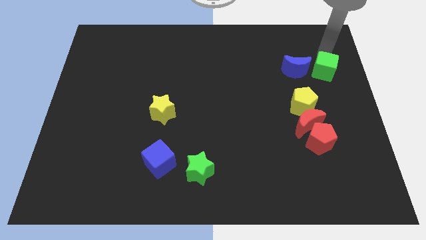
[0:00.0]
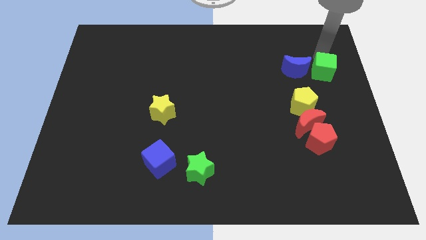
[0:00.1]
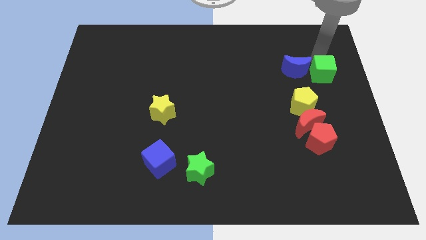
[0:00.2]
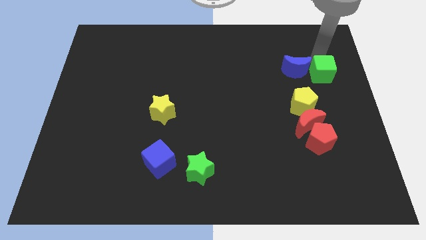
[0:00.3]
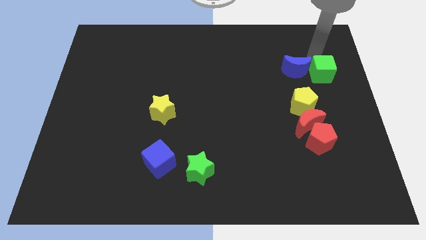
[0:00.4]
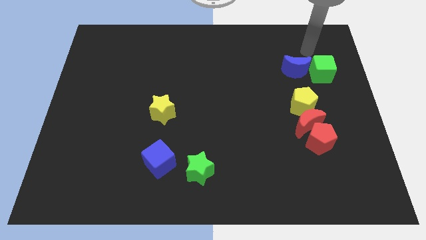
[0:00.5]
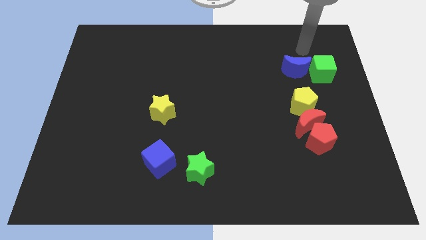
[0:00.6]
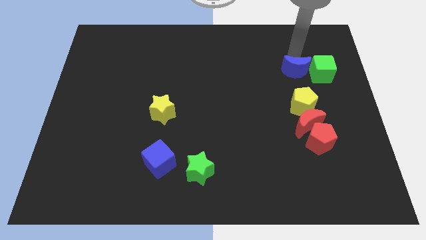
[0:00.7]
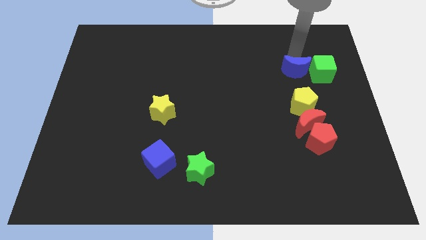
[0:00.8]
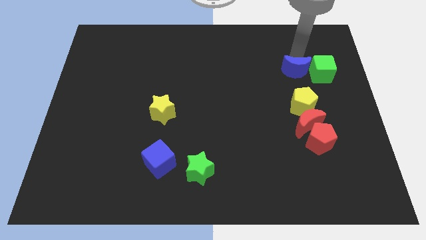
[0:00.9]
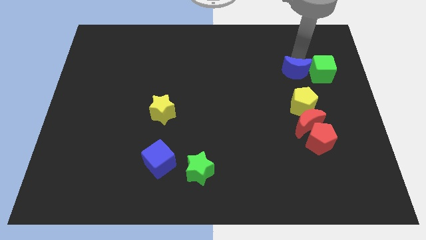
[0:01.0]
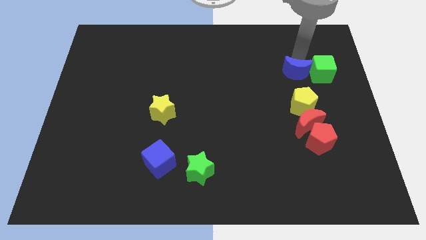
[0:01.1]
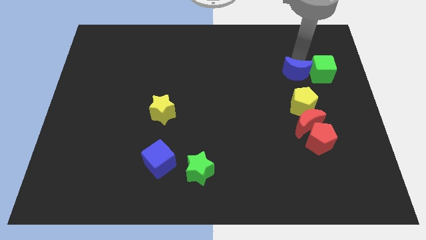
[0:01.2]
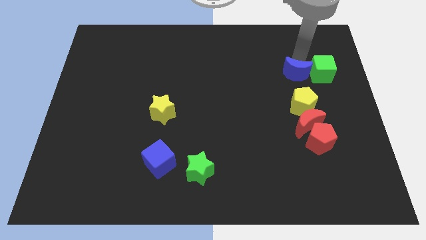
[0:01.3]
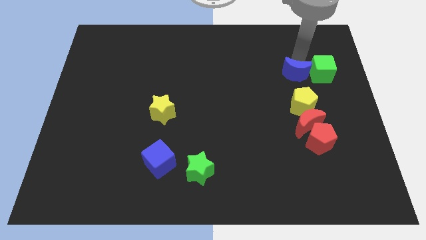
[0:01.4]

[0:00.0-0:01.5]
push the green cube close to blue crescent

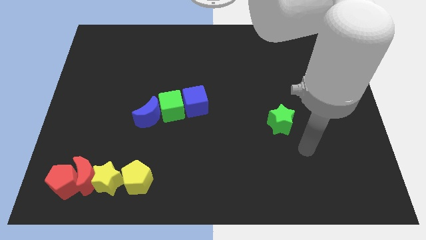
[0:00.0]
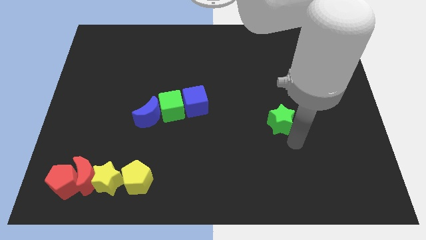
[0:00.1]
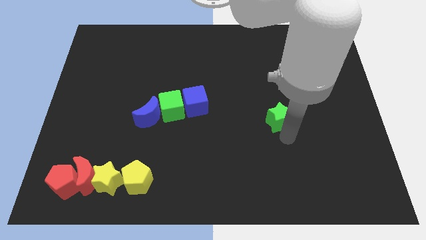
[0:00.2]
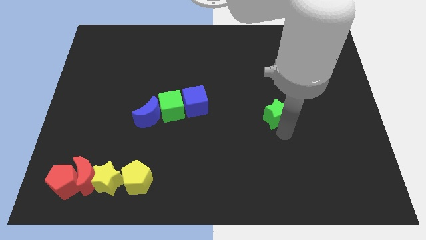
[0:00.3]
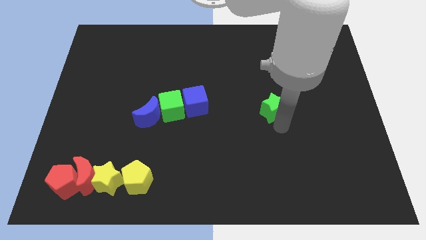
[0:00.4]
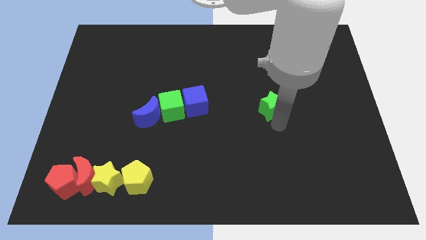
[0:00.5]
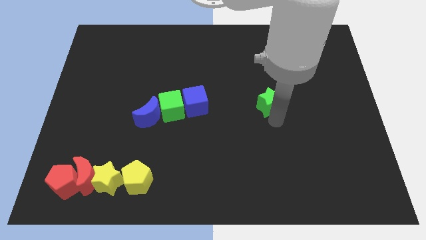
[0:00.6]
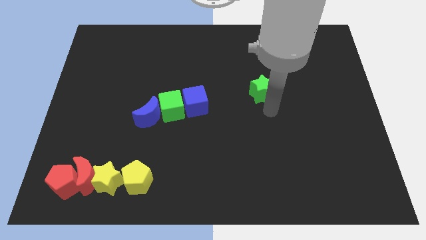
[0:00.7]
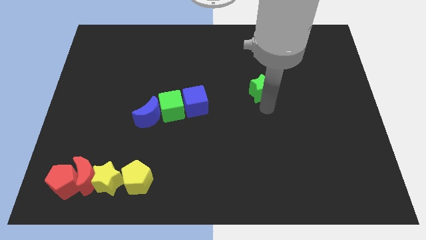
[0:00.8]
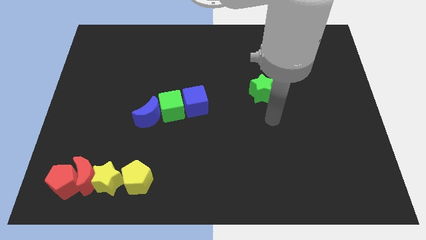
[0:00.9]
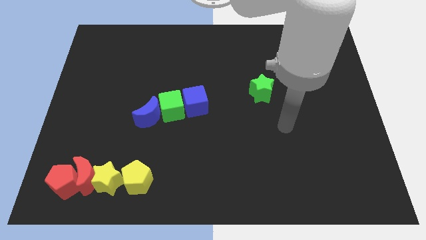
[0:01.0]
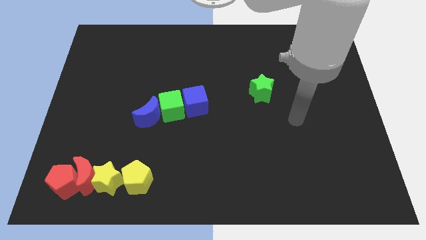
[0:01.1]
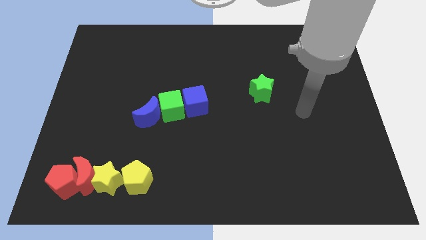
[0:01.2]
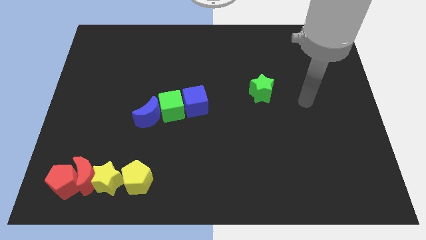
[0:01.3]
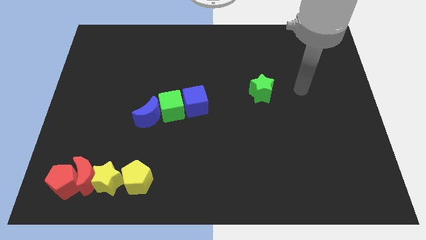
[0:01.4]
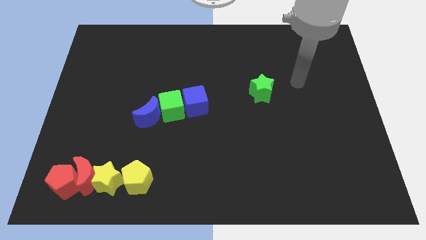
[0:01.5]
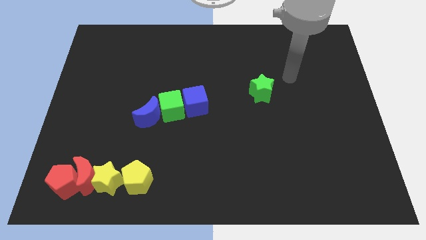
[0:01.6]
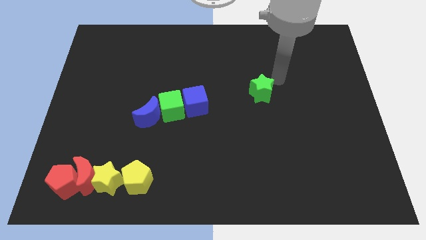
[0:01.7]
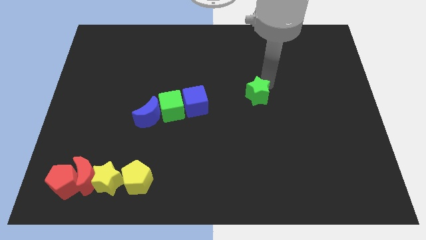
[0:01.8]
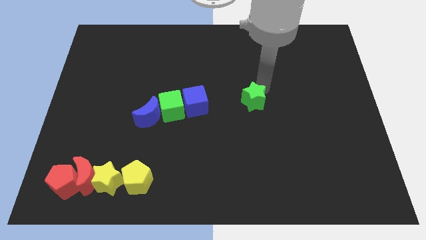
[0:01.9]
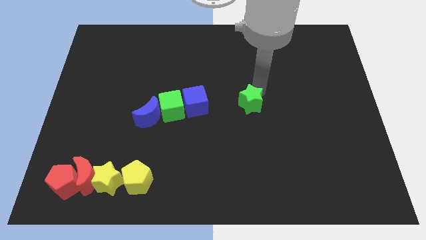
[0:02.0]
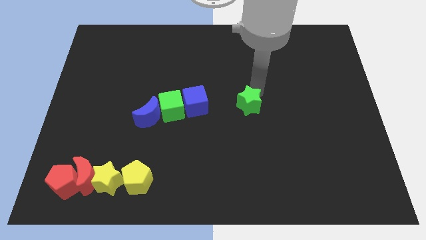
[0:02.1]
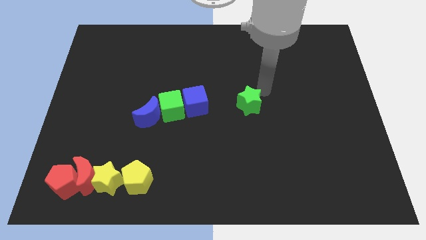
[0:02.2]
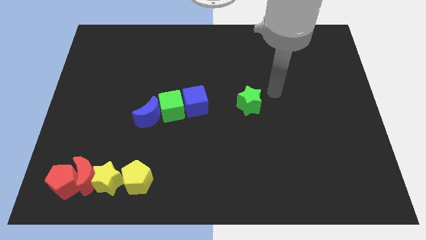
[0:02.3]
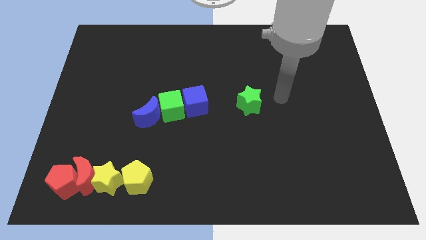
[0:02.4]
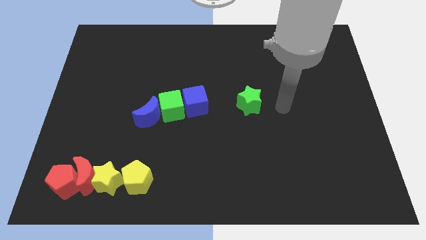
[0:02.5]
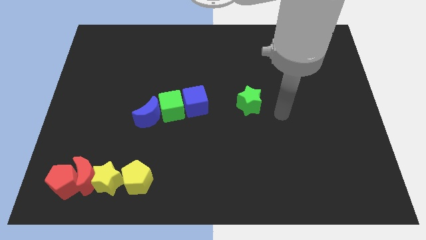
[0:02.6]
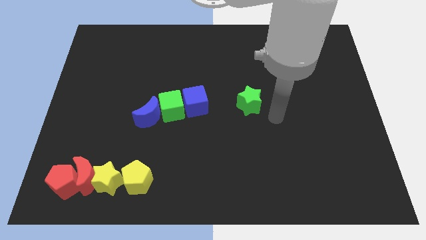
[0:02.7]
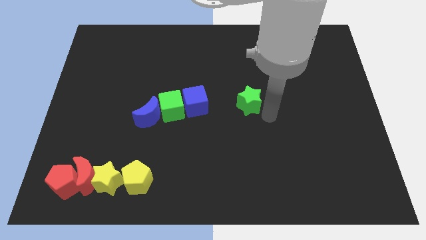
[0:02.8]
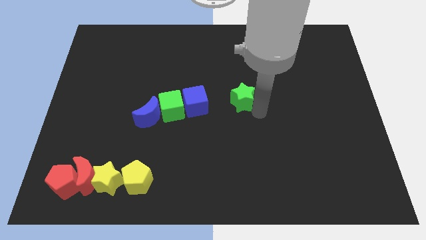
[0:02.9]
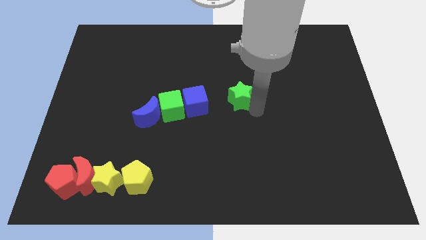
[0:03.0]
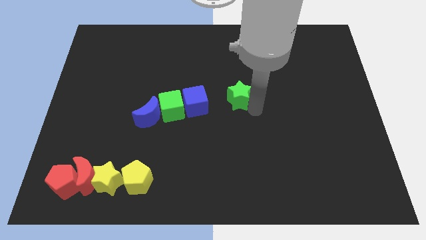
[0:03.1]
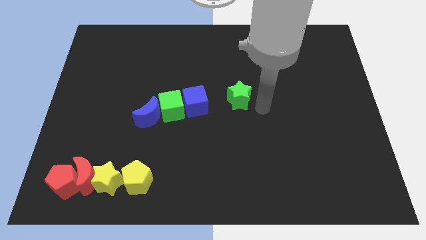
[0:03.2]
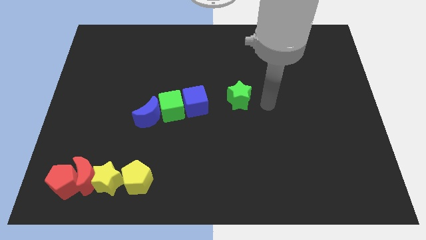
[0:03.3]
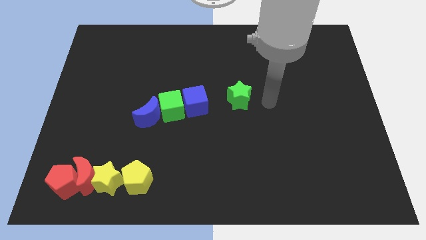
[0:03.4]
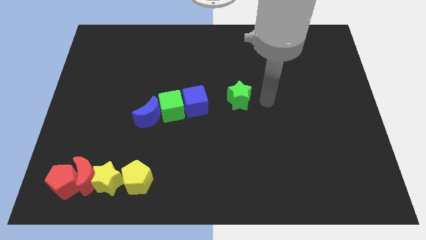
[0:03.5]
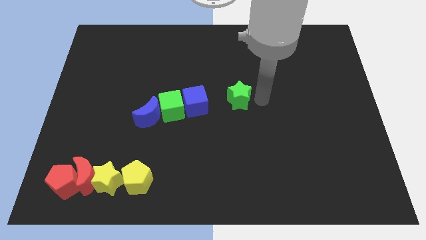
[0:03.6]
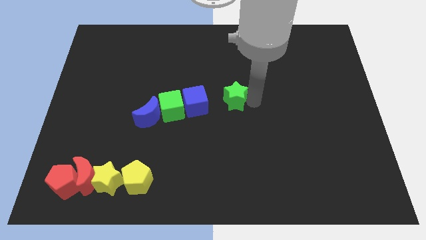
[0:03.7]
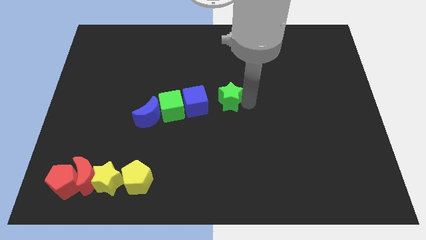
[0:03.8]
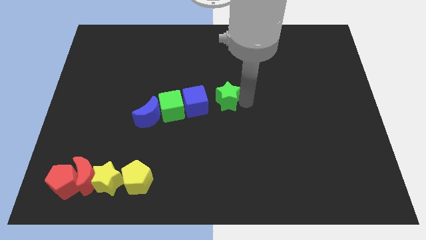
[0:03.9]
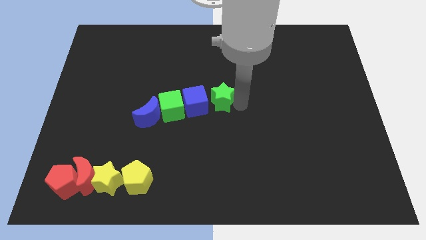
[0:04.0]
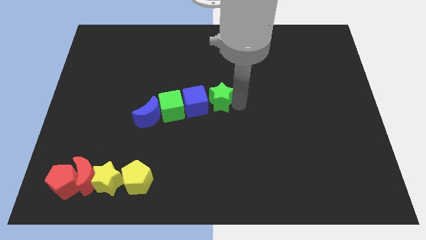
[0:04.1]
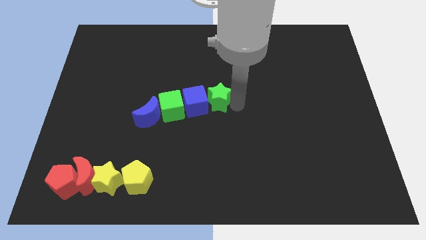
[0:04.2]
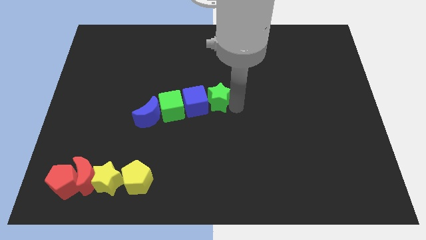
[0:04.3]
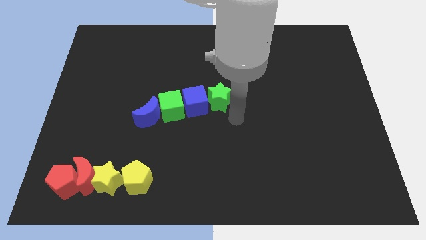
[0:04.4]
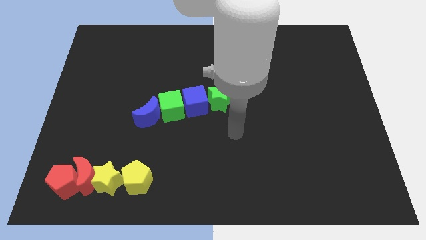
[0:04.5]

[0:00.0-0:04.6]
place the green star right to the blue cube

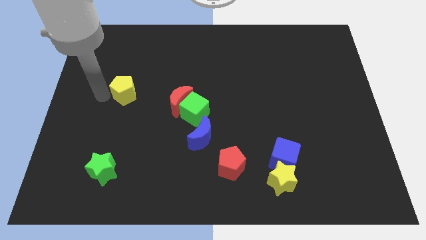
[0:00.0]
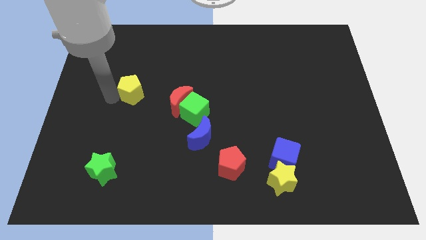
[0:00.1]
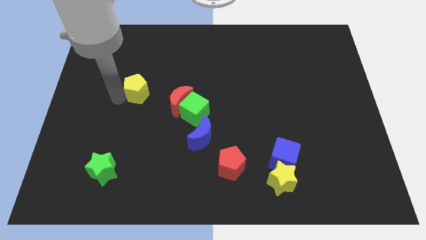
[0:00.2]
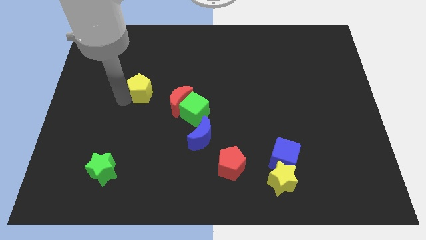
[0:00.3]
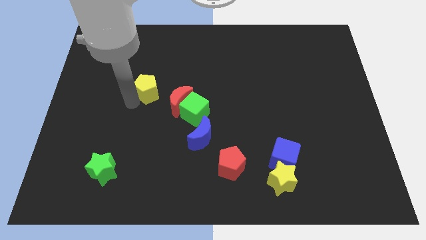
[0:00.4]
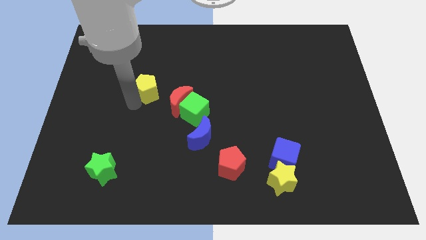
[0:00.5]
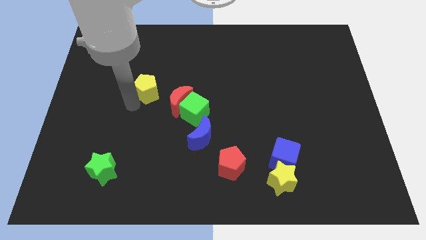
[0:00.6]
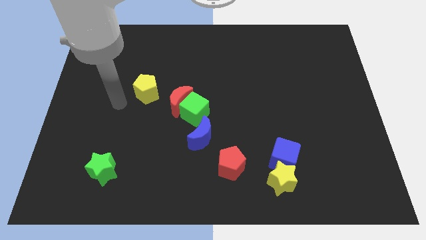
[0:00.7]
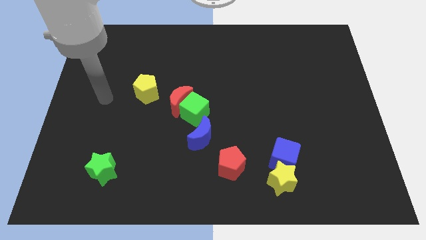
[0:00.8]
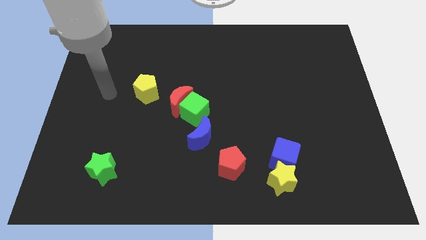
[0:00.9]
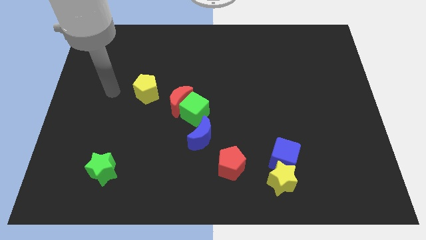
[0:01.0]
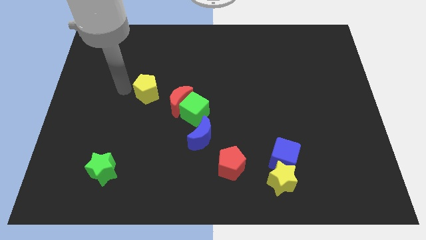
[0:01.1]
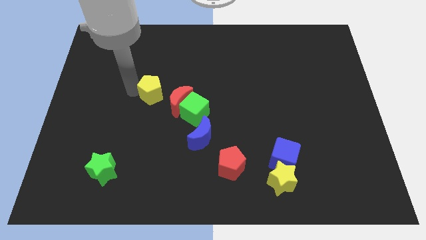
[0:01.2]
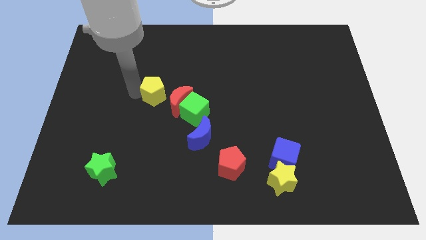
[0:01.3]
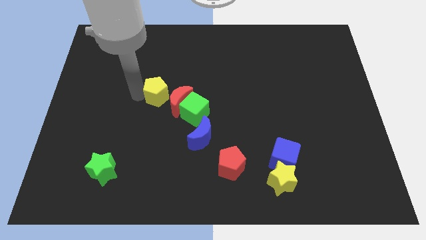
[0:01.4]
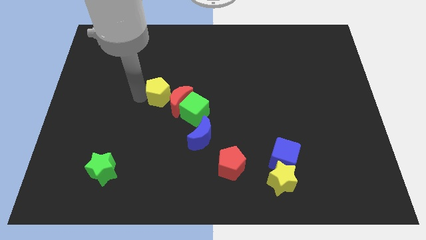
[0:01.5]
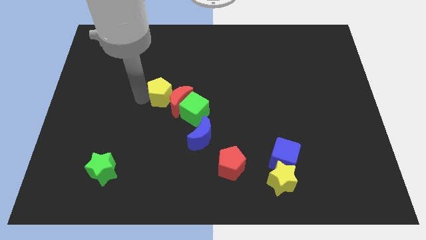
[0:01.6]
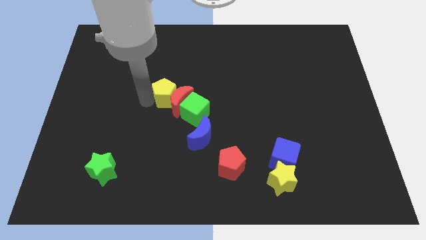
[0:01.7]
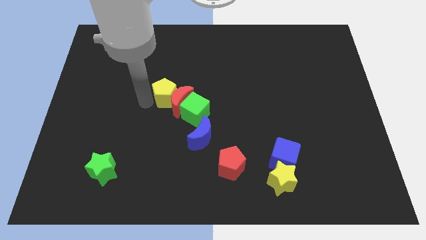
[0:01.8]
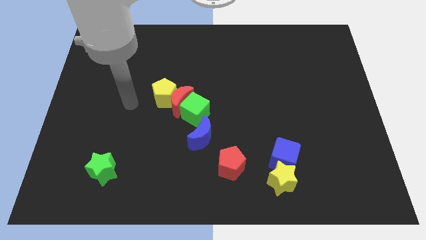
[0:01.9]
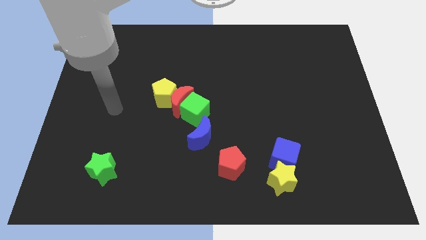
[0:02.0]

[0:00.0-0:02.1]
move the yellow pentagon into the red crescent

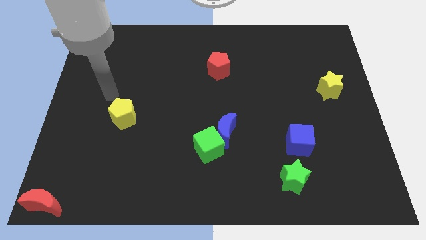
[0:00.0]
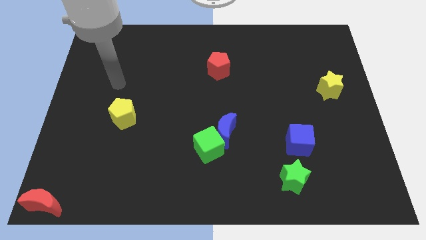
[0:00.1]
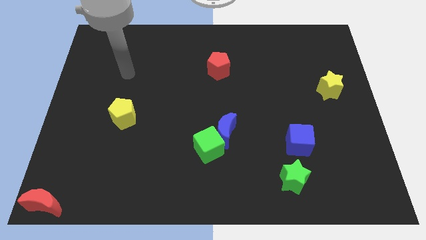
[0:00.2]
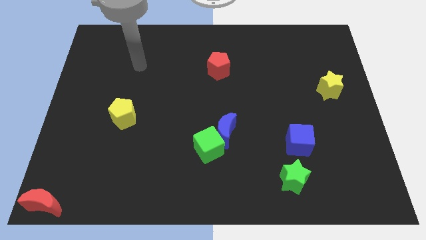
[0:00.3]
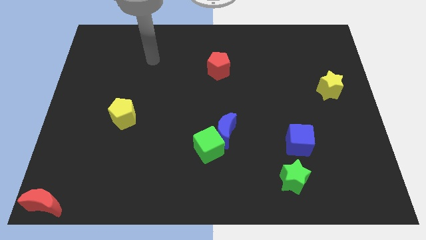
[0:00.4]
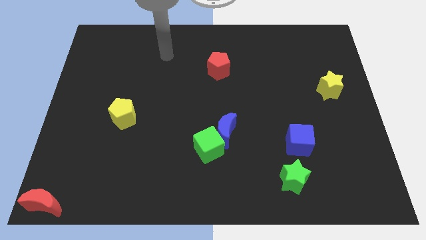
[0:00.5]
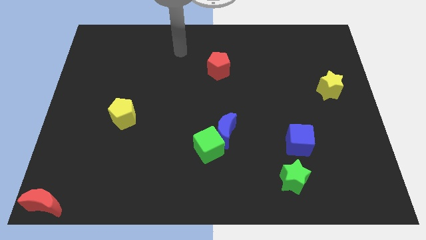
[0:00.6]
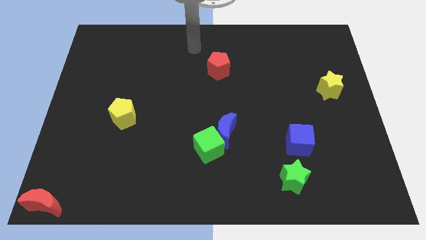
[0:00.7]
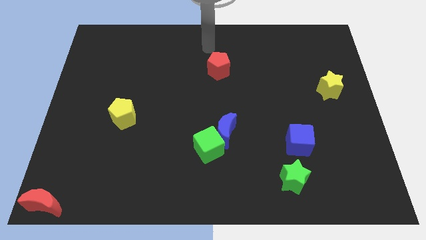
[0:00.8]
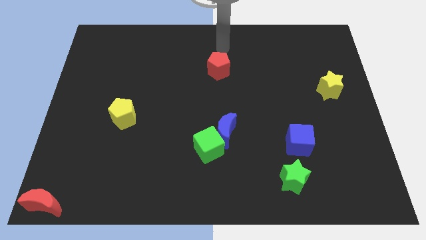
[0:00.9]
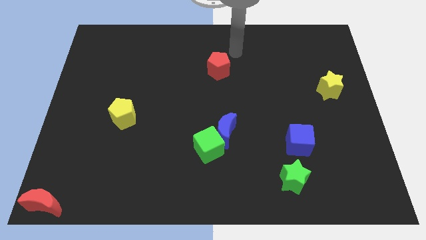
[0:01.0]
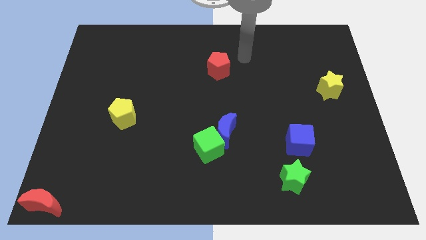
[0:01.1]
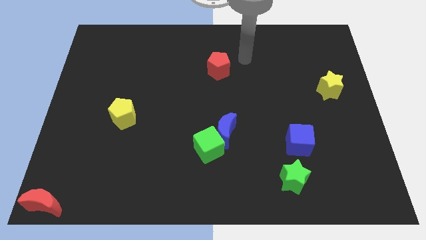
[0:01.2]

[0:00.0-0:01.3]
go away from the yellow pentagon
